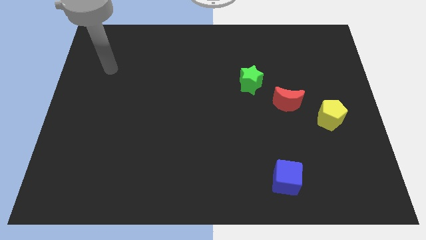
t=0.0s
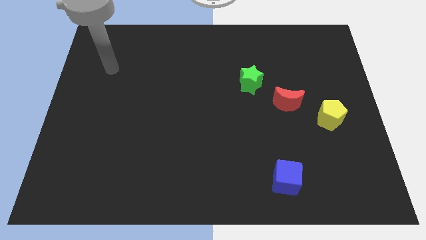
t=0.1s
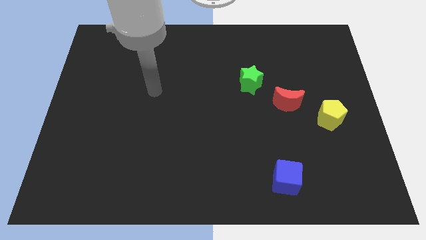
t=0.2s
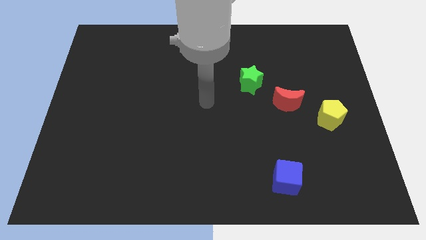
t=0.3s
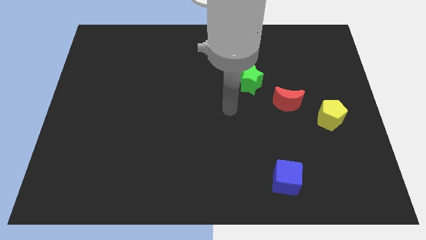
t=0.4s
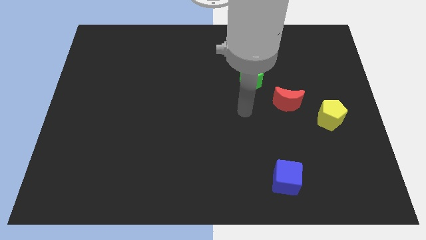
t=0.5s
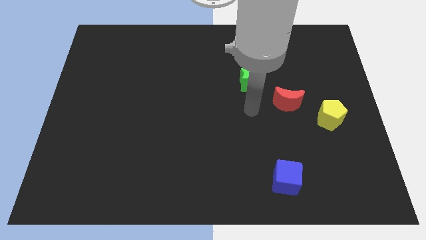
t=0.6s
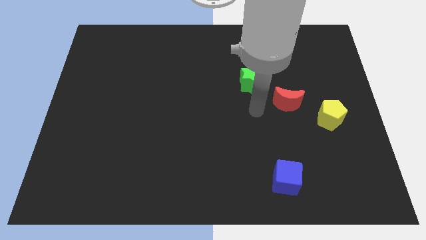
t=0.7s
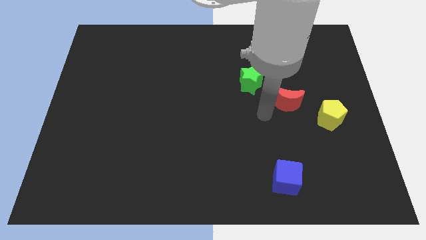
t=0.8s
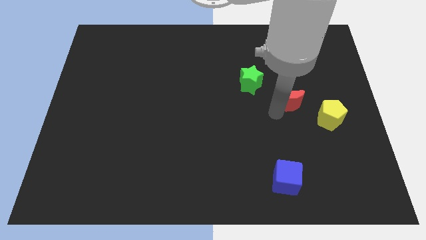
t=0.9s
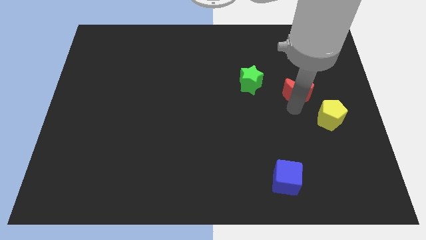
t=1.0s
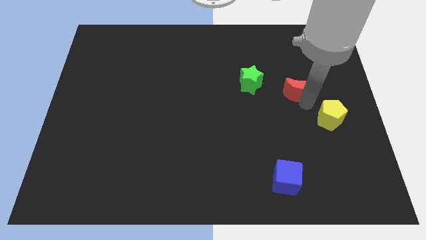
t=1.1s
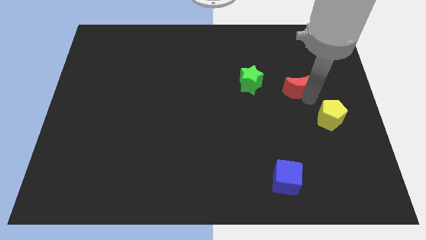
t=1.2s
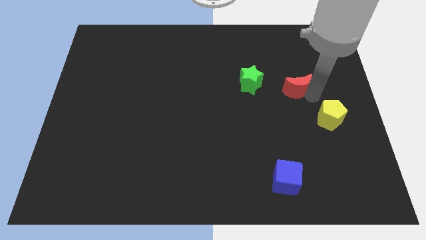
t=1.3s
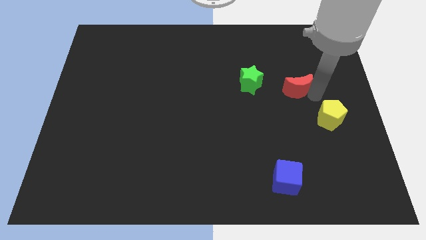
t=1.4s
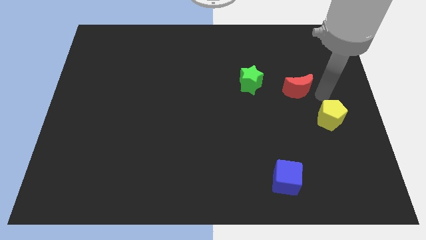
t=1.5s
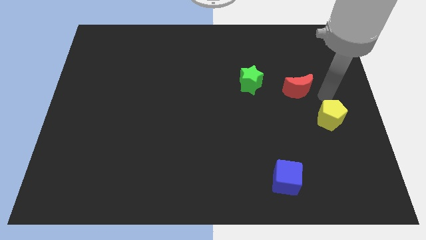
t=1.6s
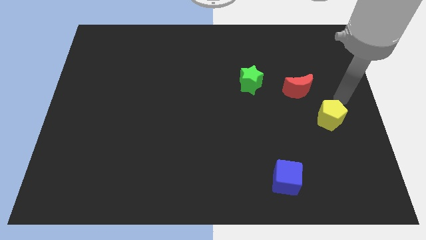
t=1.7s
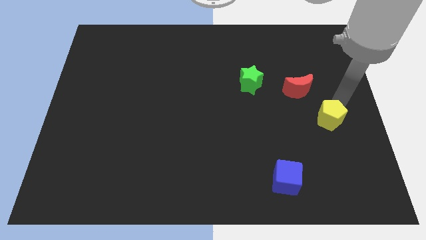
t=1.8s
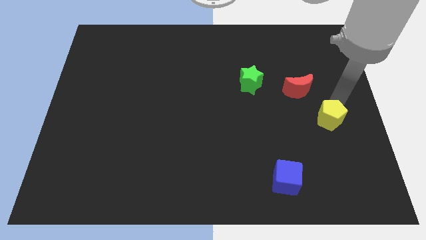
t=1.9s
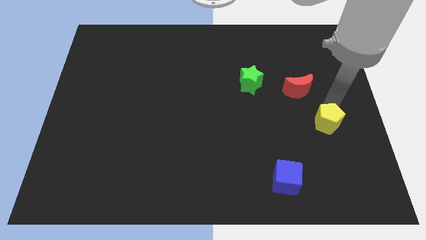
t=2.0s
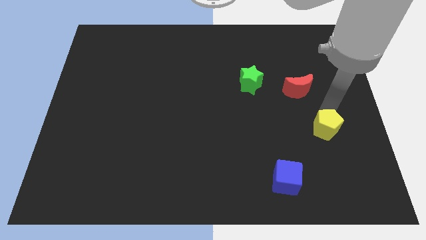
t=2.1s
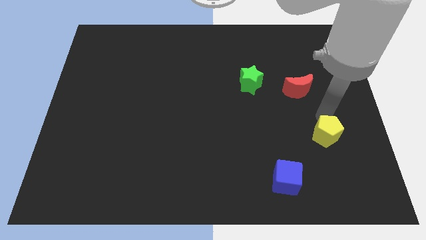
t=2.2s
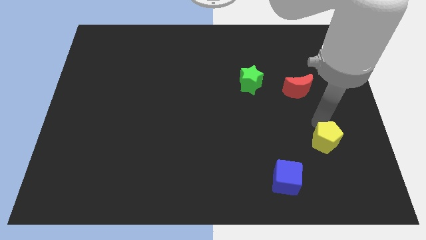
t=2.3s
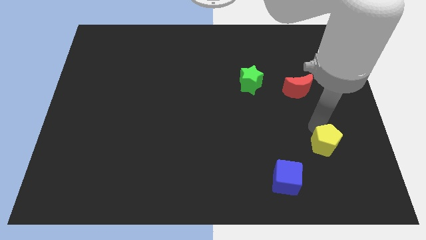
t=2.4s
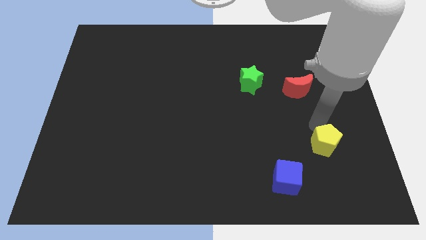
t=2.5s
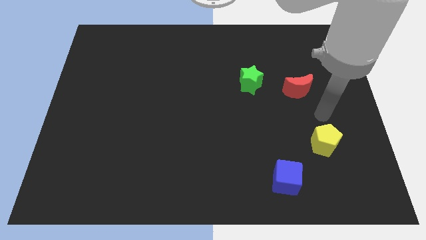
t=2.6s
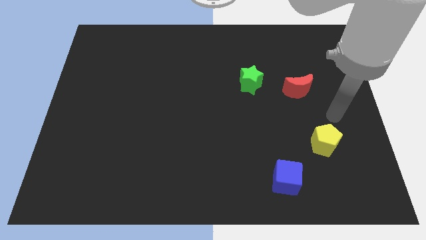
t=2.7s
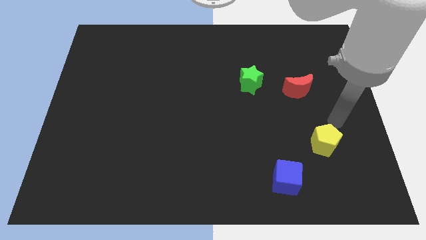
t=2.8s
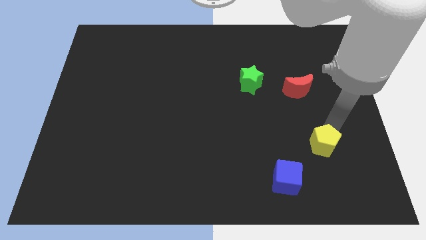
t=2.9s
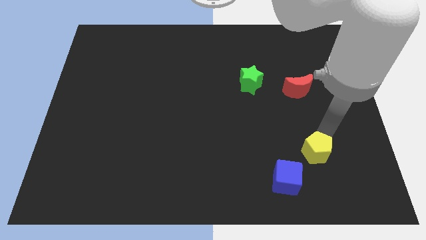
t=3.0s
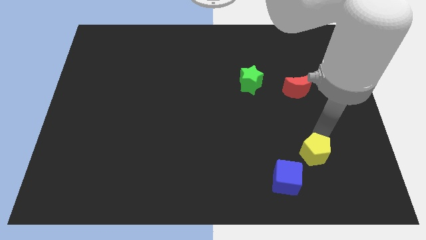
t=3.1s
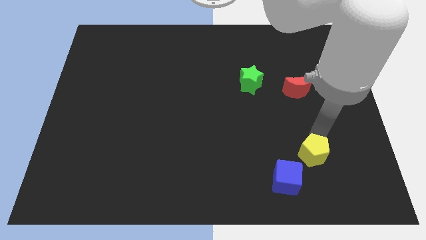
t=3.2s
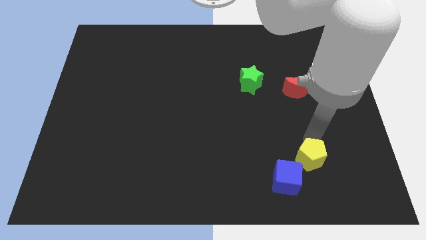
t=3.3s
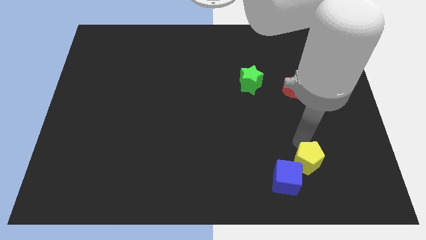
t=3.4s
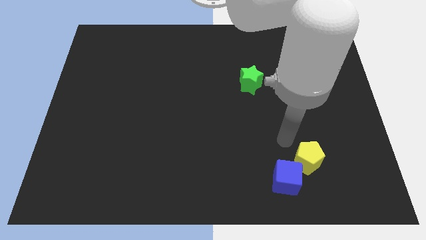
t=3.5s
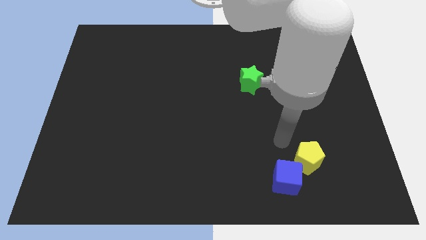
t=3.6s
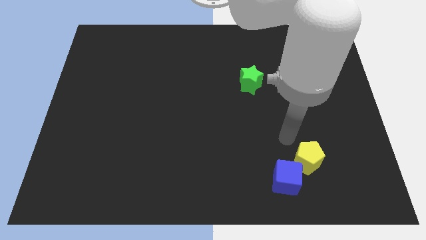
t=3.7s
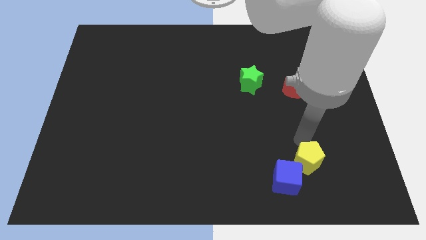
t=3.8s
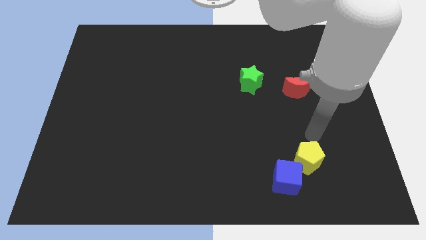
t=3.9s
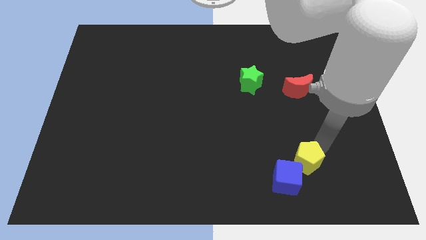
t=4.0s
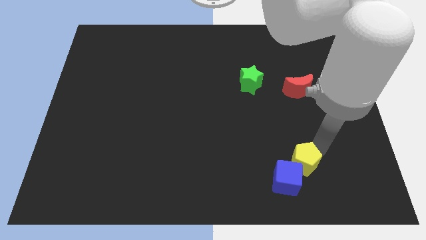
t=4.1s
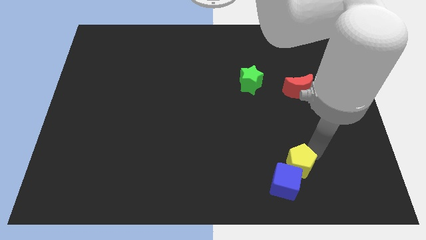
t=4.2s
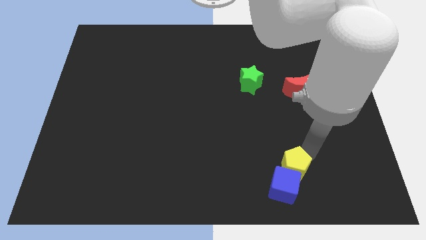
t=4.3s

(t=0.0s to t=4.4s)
slide the yellow pentagon to the blue cube

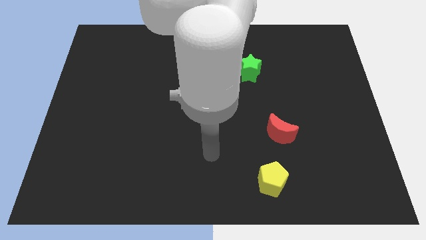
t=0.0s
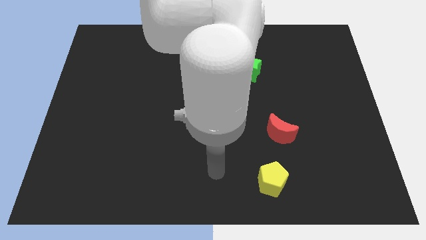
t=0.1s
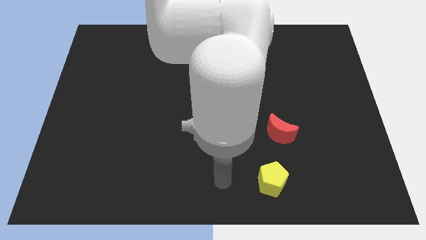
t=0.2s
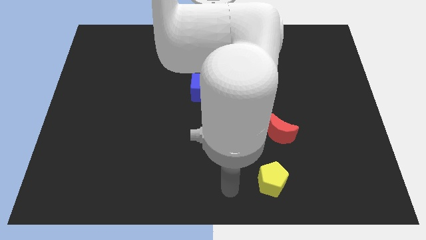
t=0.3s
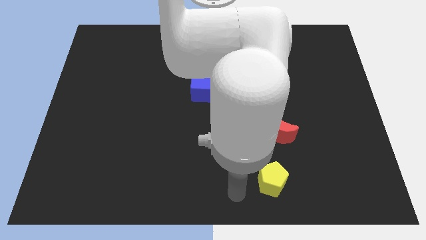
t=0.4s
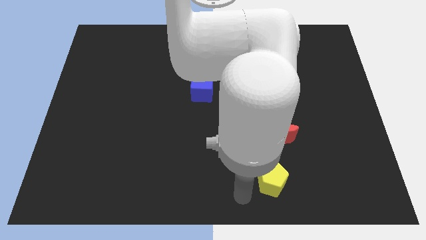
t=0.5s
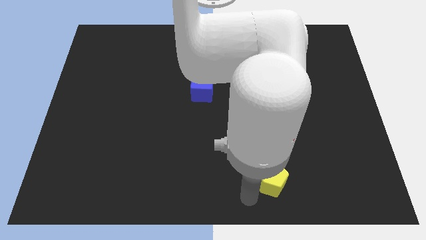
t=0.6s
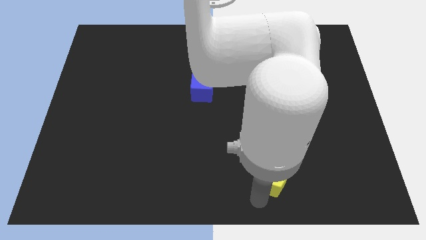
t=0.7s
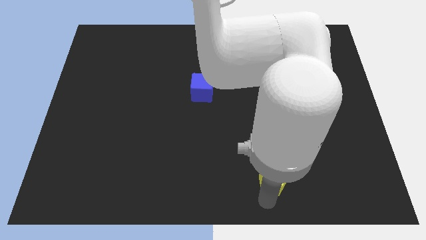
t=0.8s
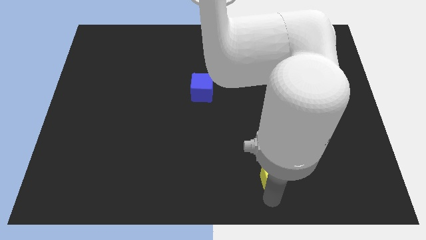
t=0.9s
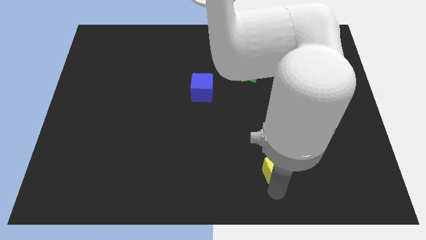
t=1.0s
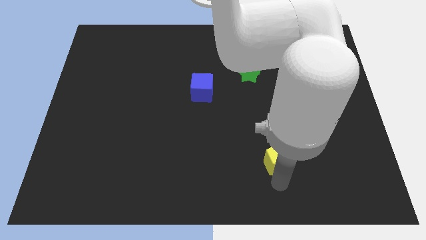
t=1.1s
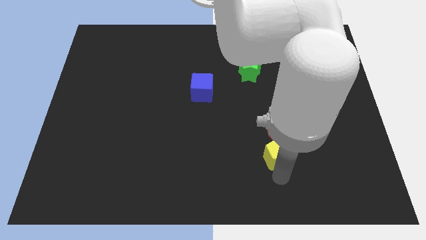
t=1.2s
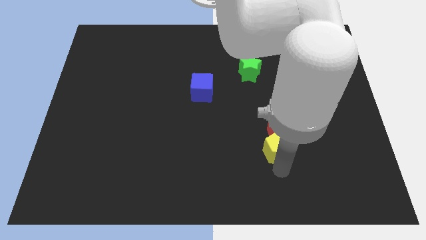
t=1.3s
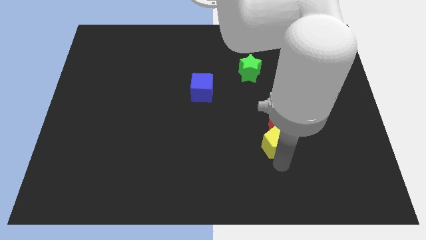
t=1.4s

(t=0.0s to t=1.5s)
move the yellow pentagon to the red moon

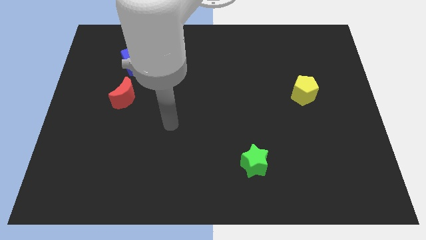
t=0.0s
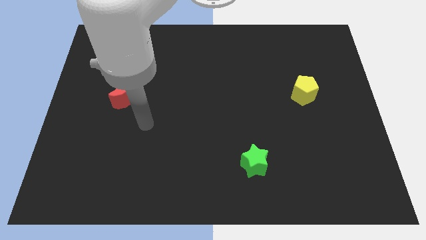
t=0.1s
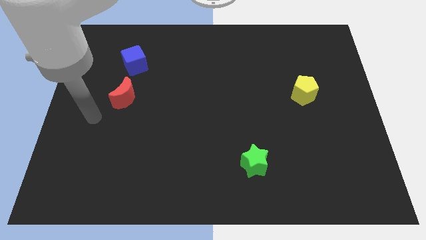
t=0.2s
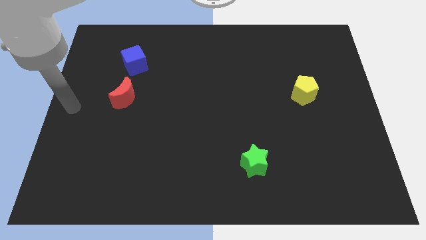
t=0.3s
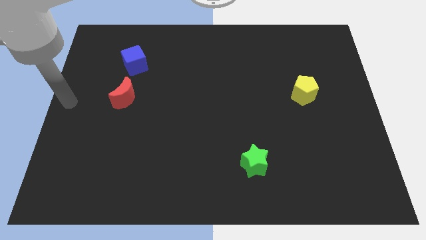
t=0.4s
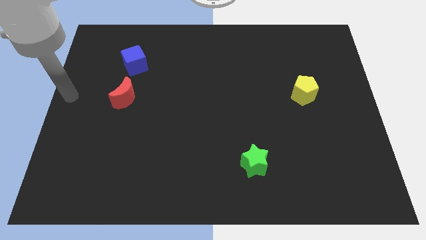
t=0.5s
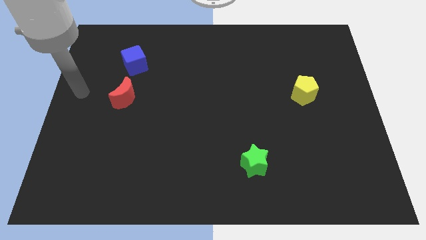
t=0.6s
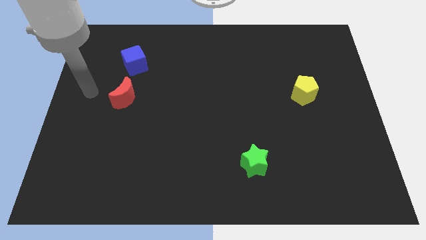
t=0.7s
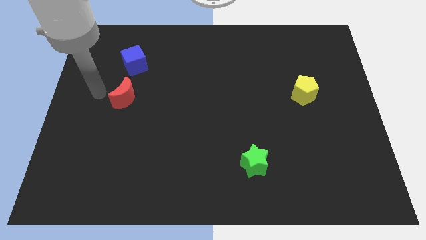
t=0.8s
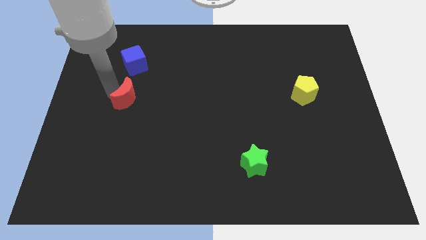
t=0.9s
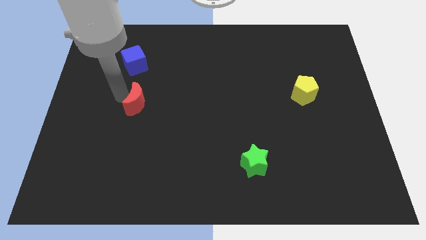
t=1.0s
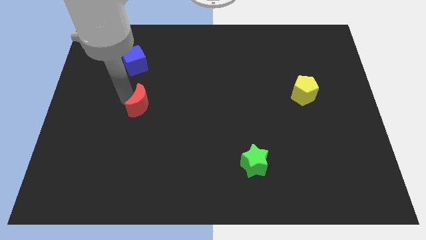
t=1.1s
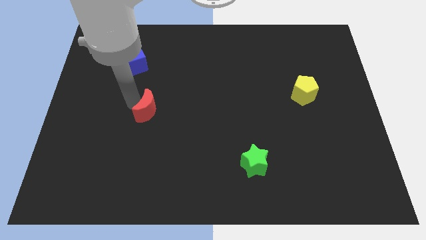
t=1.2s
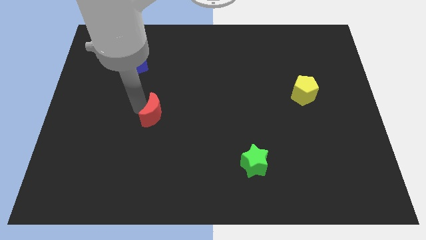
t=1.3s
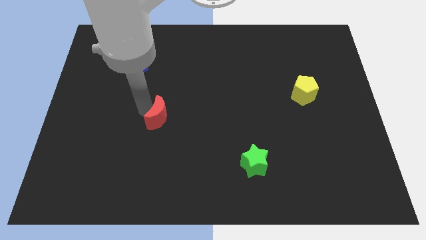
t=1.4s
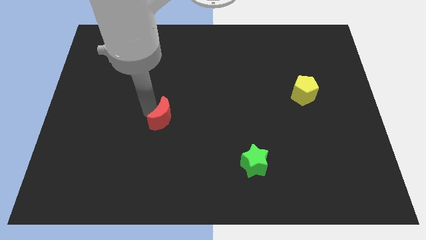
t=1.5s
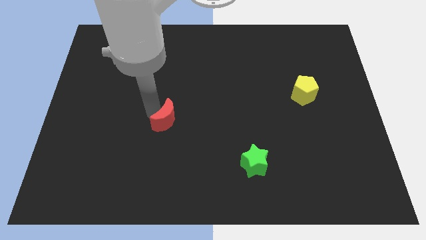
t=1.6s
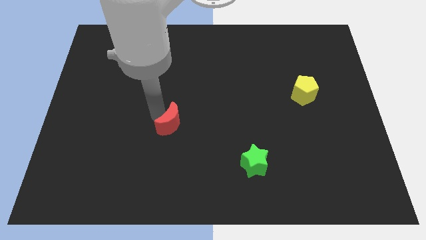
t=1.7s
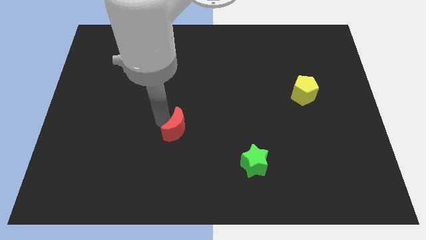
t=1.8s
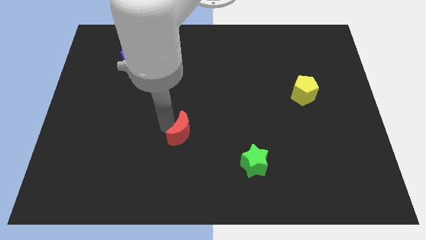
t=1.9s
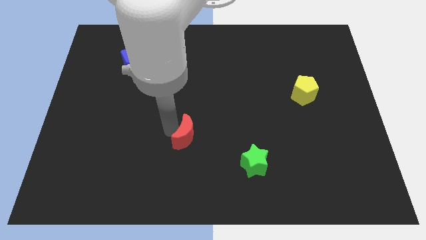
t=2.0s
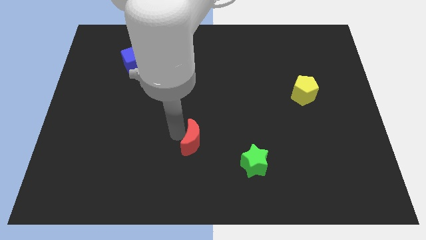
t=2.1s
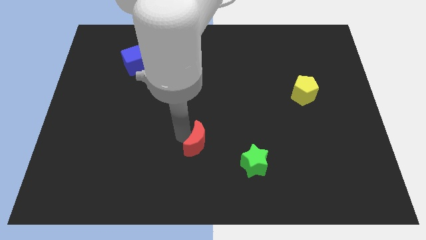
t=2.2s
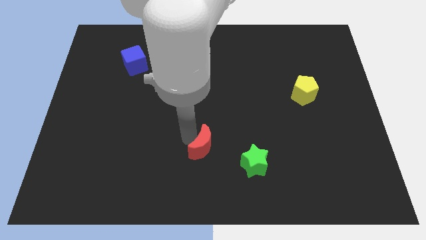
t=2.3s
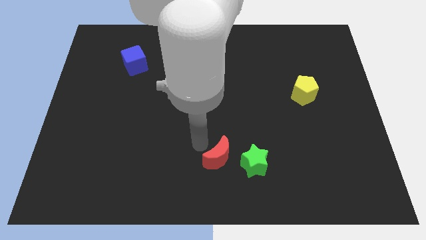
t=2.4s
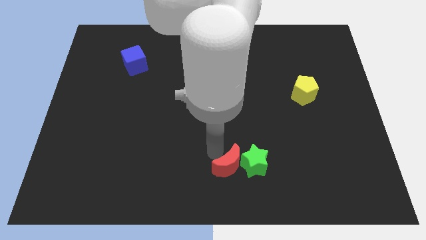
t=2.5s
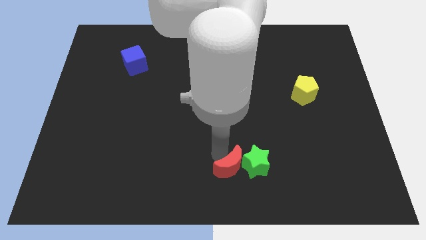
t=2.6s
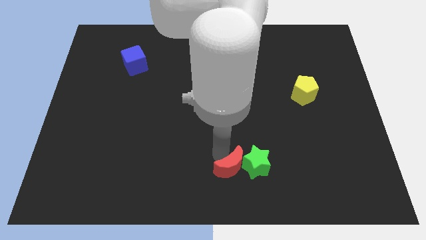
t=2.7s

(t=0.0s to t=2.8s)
move the moon to the star
